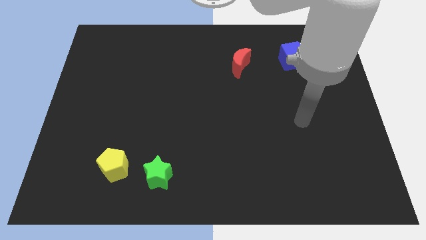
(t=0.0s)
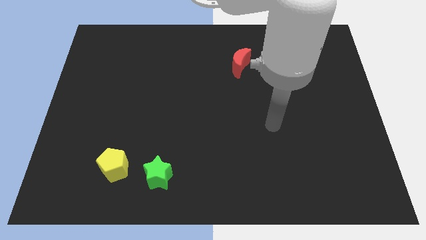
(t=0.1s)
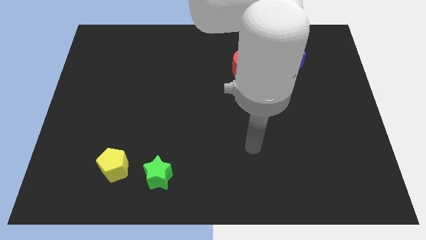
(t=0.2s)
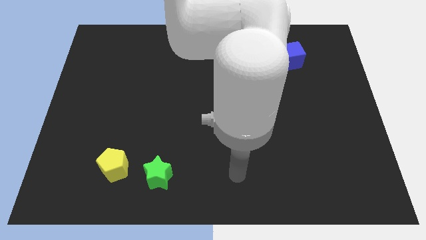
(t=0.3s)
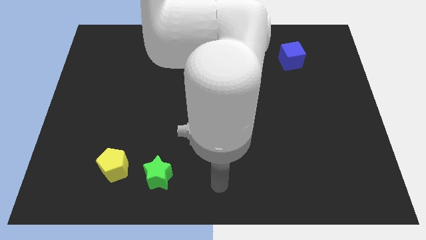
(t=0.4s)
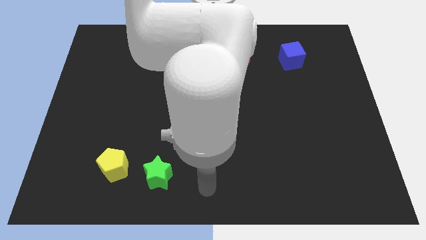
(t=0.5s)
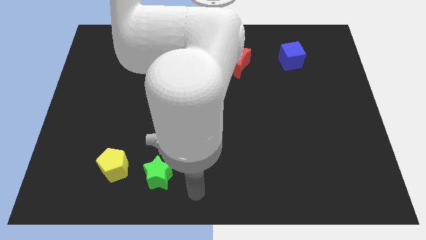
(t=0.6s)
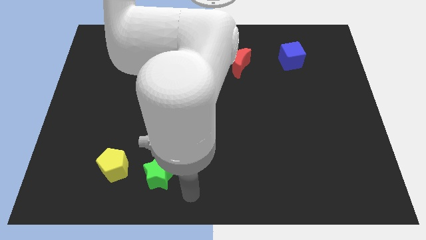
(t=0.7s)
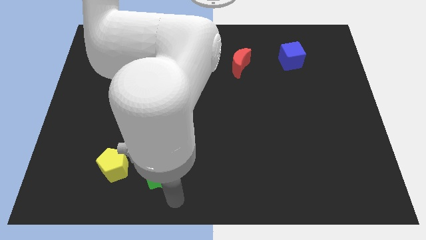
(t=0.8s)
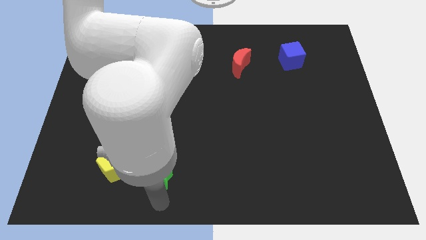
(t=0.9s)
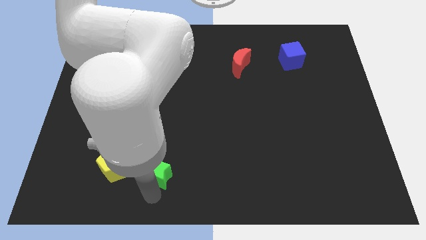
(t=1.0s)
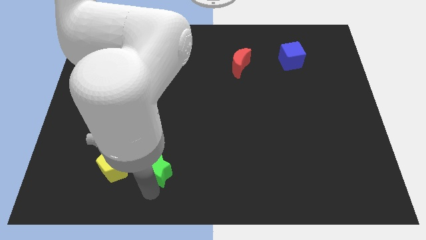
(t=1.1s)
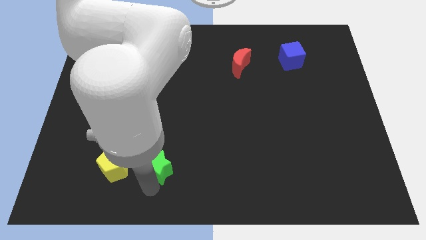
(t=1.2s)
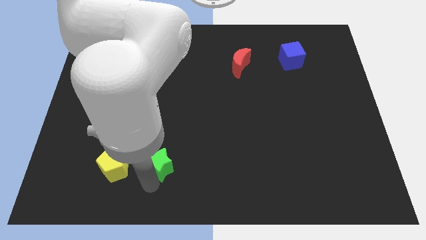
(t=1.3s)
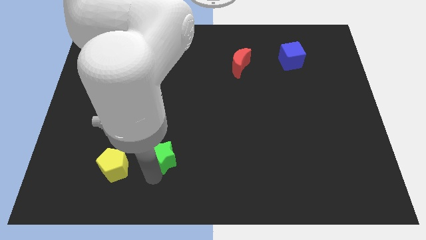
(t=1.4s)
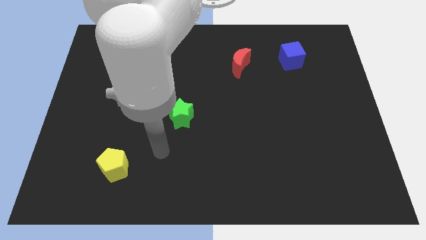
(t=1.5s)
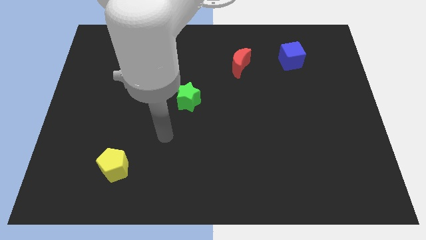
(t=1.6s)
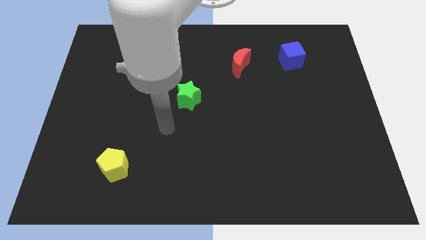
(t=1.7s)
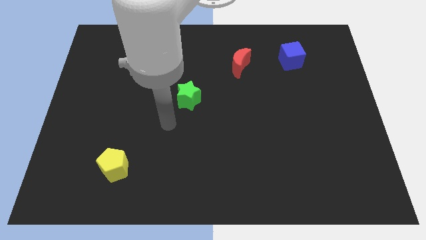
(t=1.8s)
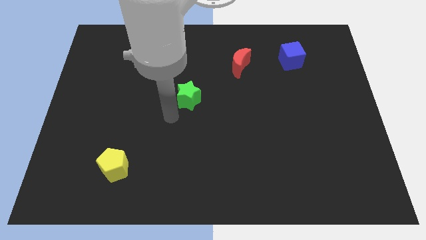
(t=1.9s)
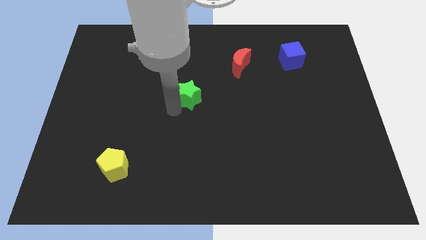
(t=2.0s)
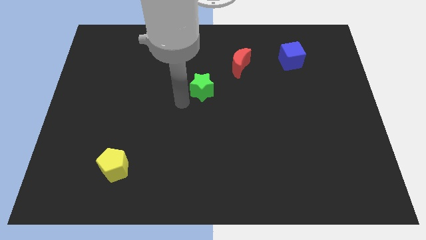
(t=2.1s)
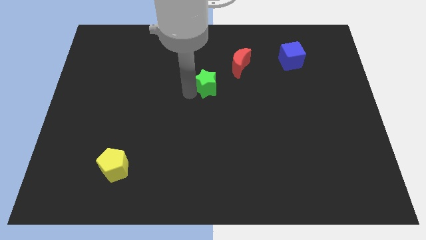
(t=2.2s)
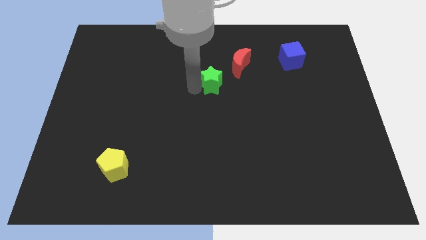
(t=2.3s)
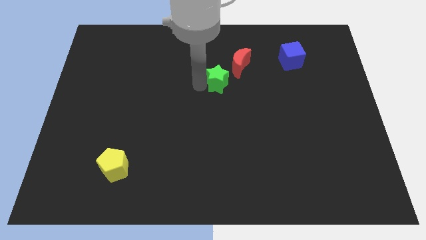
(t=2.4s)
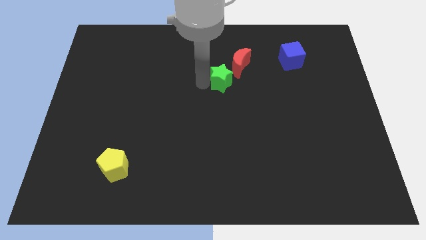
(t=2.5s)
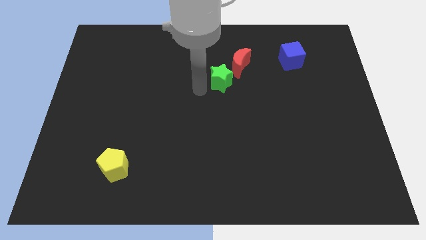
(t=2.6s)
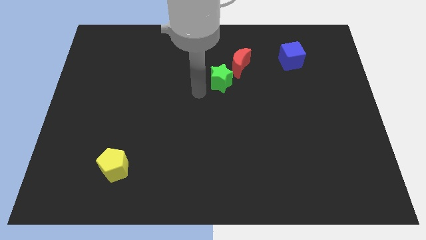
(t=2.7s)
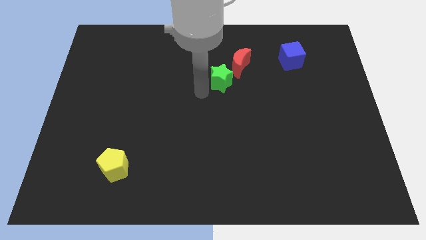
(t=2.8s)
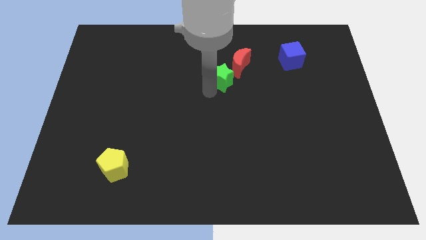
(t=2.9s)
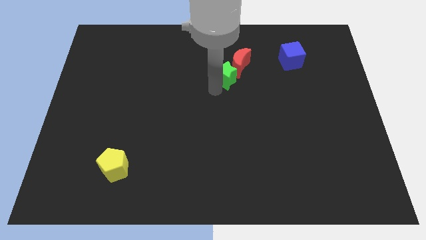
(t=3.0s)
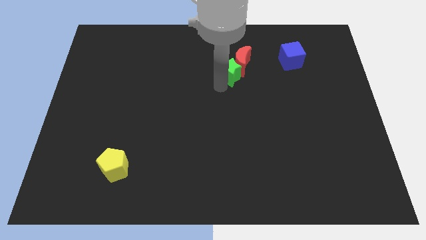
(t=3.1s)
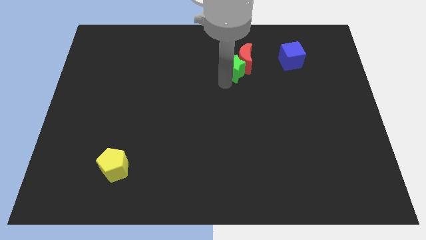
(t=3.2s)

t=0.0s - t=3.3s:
put the green star next to the red moon

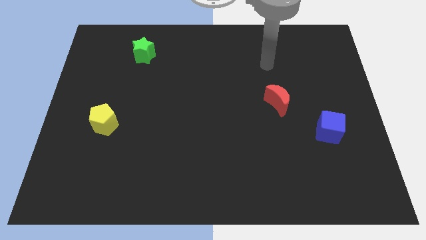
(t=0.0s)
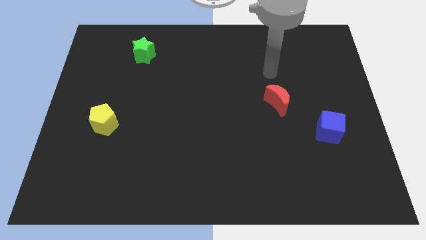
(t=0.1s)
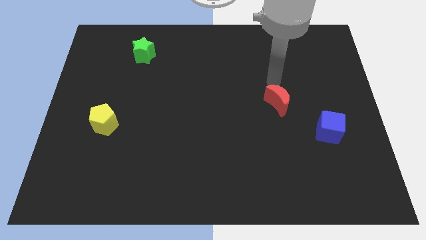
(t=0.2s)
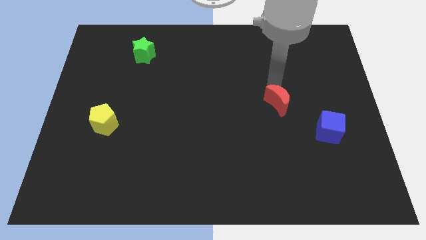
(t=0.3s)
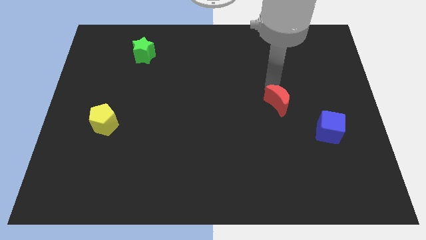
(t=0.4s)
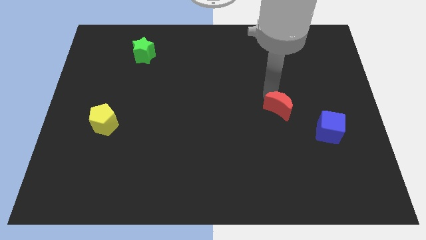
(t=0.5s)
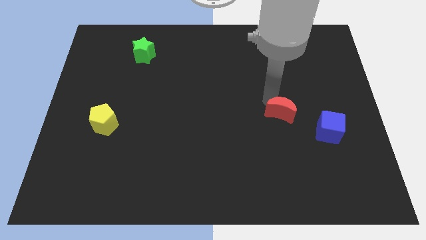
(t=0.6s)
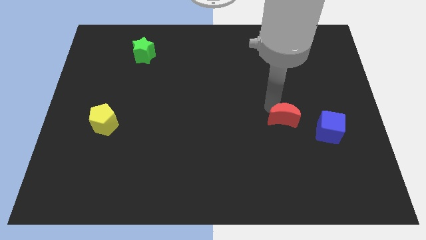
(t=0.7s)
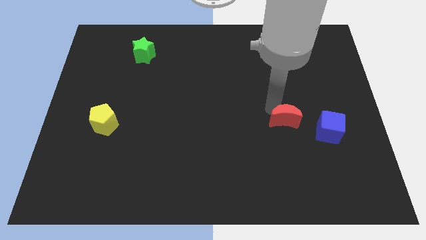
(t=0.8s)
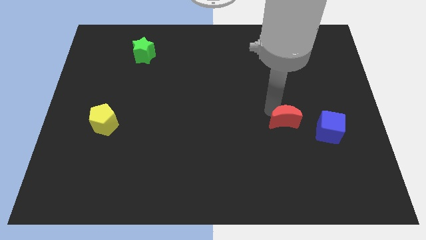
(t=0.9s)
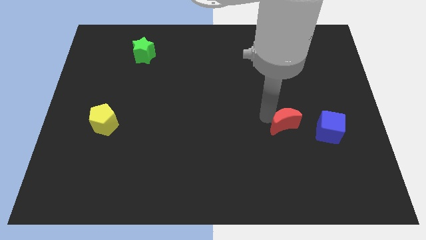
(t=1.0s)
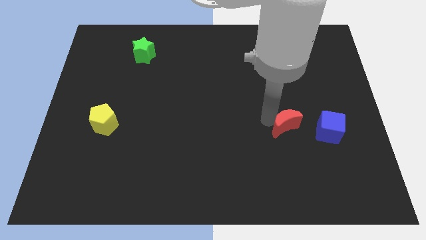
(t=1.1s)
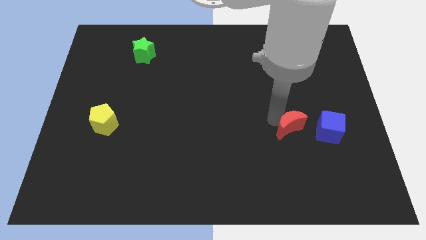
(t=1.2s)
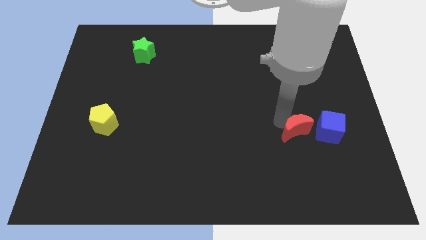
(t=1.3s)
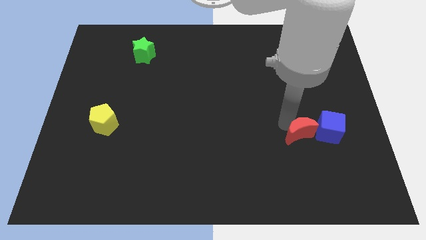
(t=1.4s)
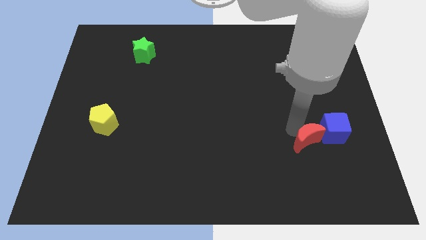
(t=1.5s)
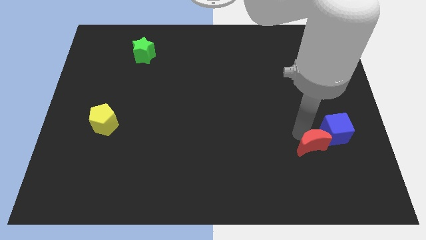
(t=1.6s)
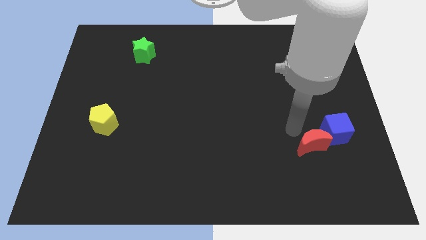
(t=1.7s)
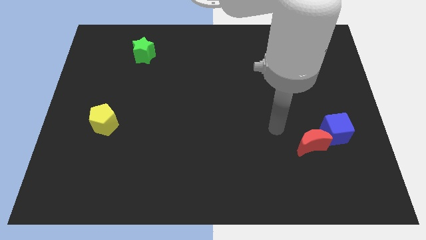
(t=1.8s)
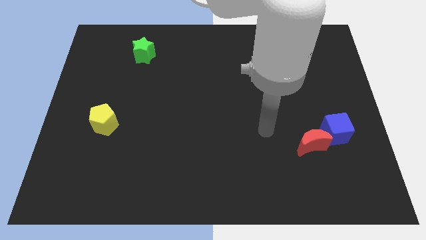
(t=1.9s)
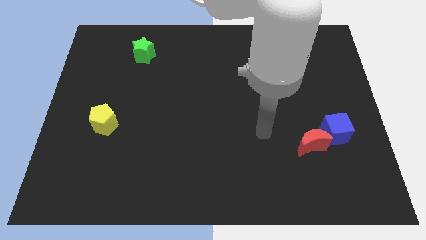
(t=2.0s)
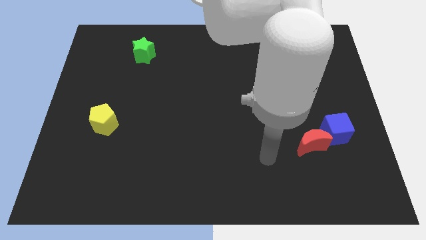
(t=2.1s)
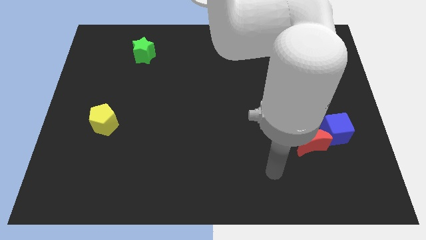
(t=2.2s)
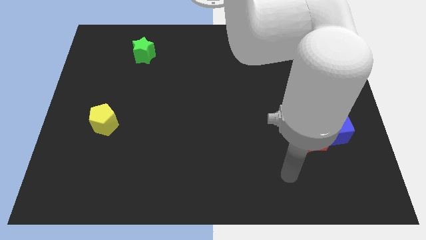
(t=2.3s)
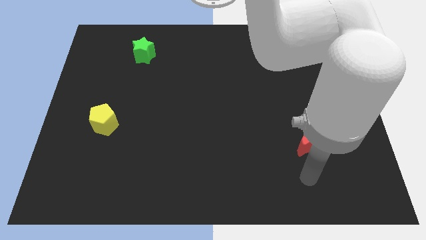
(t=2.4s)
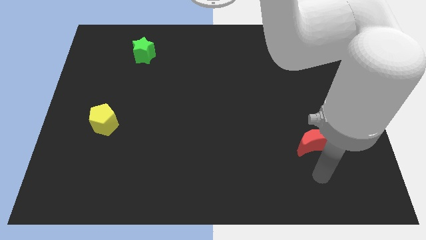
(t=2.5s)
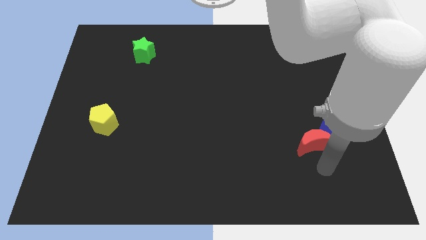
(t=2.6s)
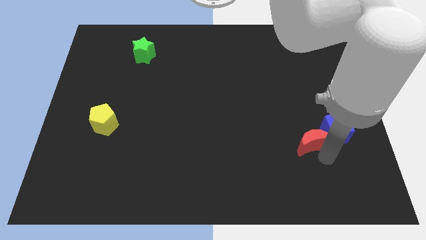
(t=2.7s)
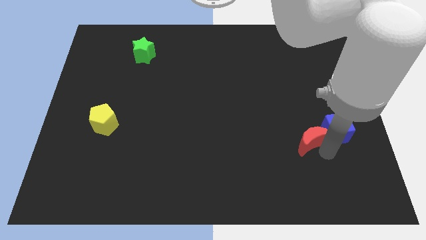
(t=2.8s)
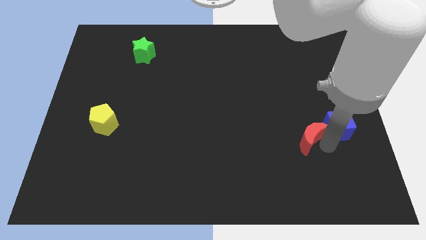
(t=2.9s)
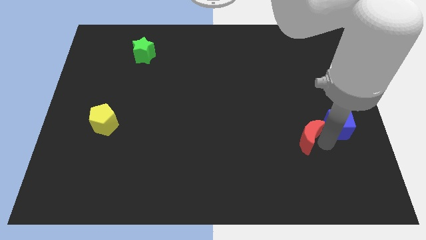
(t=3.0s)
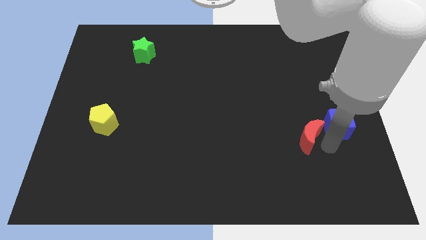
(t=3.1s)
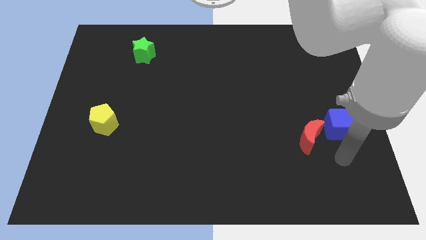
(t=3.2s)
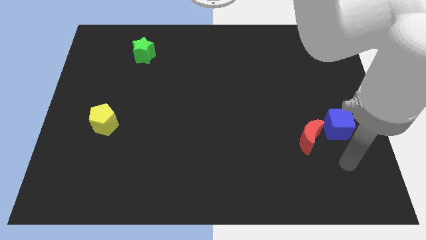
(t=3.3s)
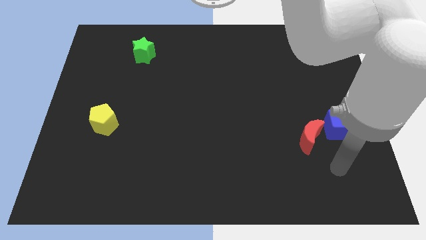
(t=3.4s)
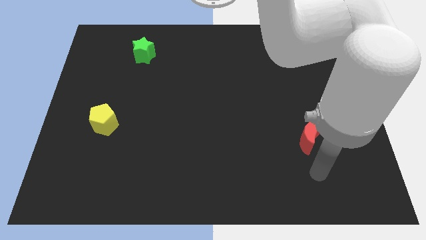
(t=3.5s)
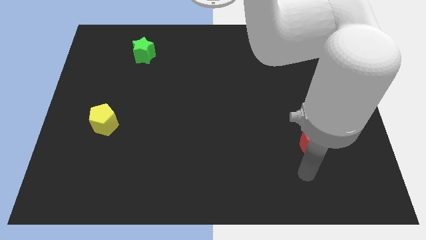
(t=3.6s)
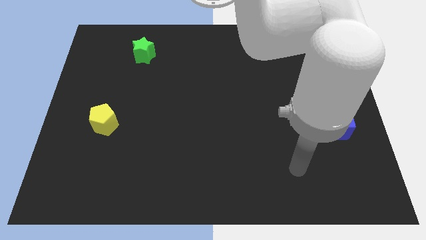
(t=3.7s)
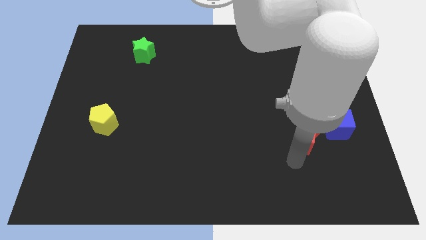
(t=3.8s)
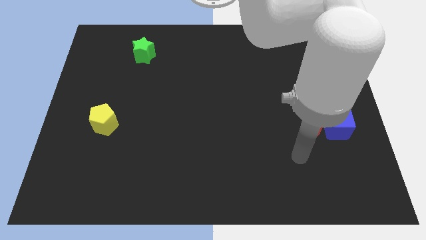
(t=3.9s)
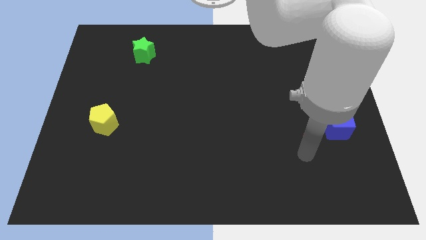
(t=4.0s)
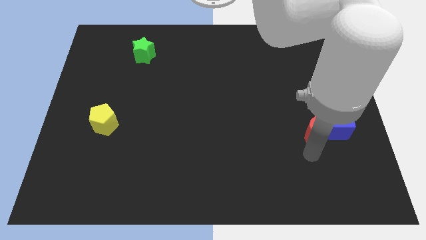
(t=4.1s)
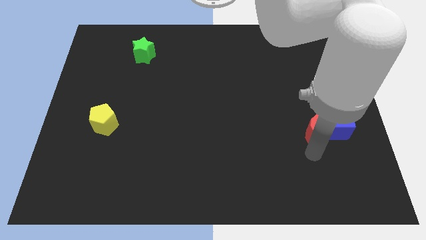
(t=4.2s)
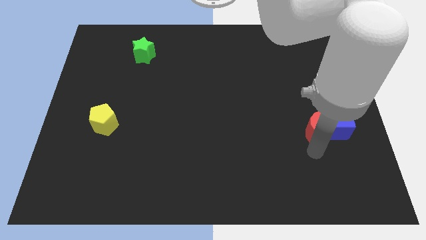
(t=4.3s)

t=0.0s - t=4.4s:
push the red block close to the blue cube
